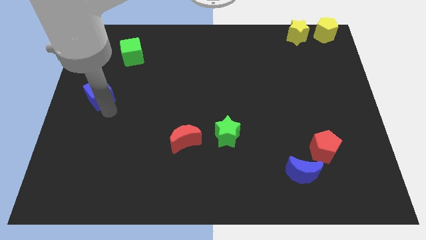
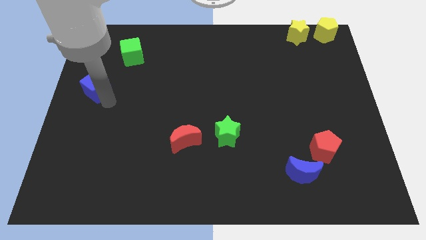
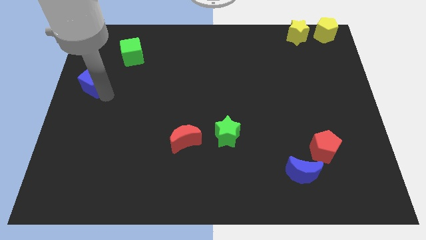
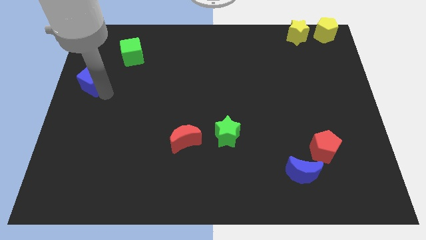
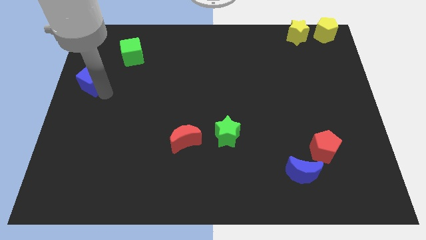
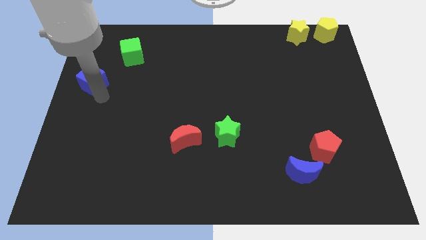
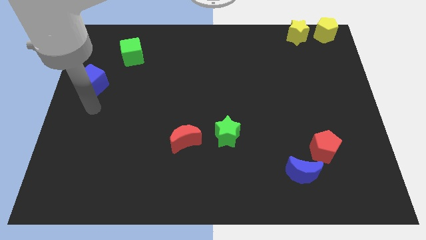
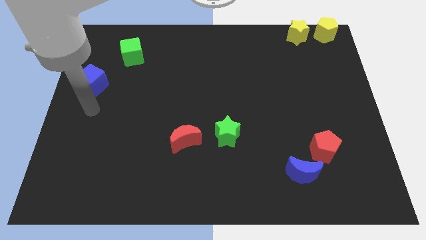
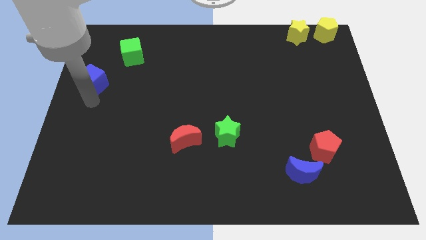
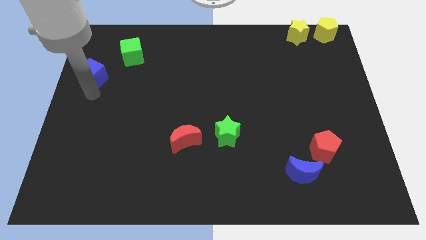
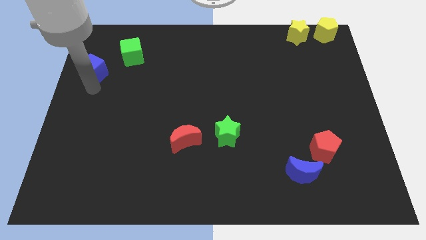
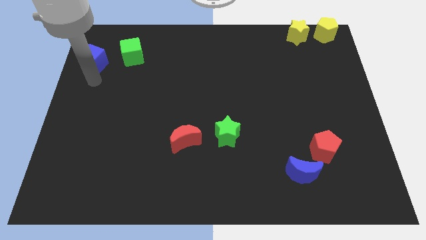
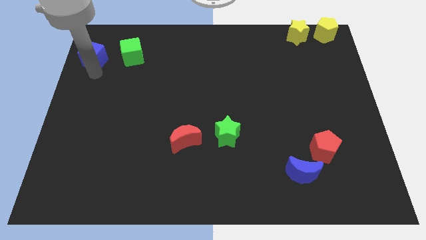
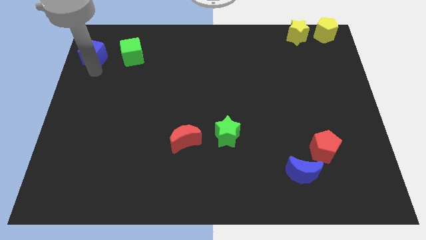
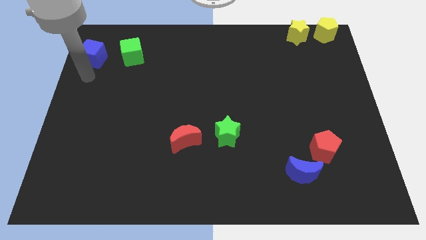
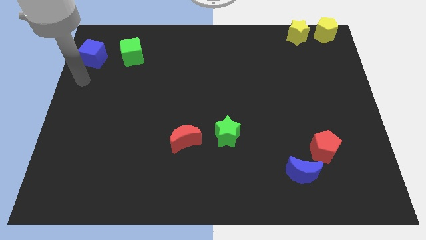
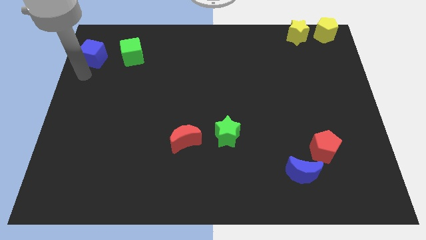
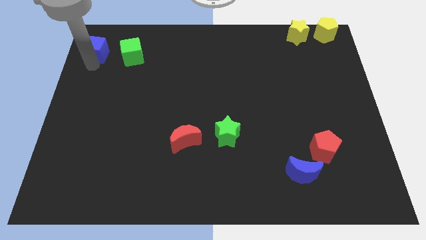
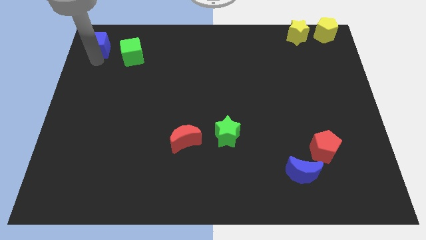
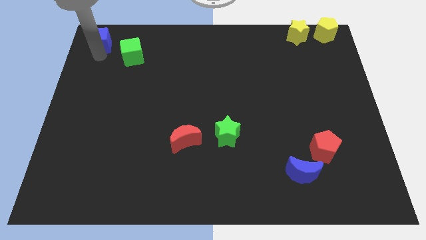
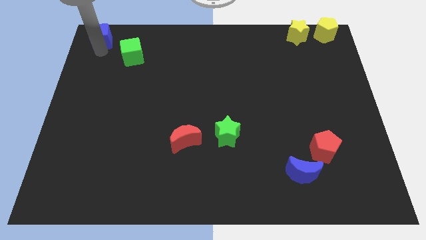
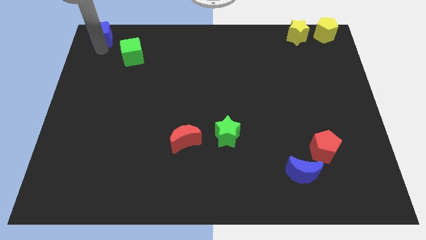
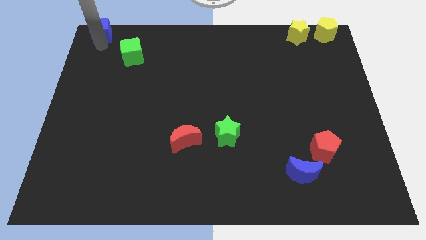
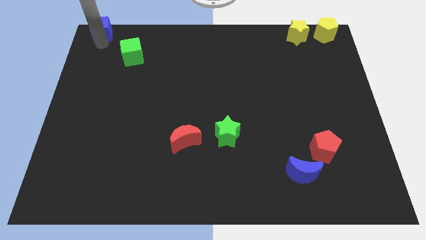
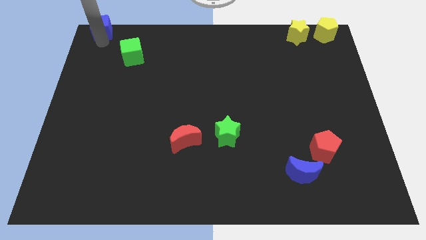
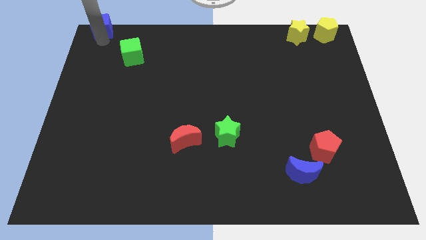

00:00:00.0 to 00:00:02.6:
move the blue cube to the top left of the green cube

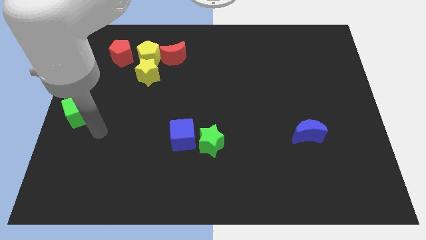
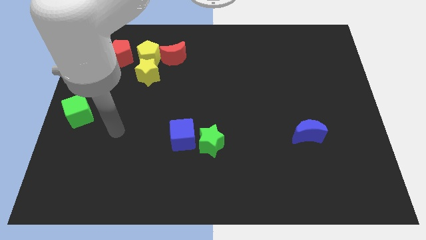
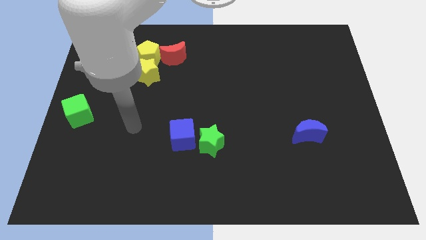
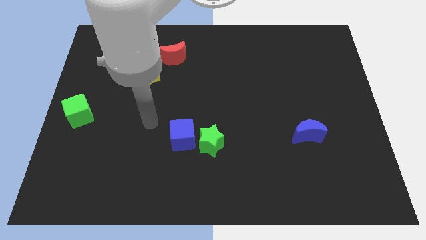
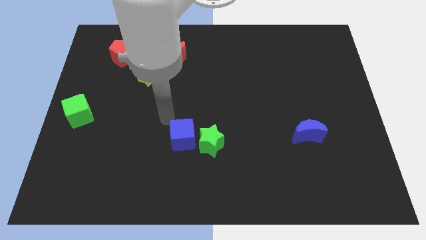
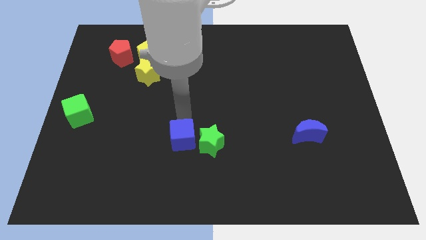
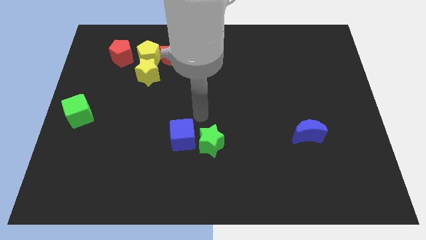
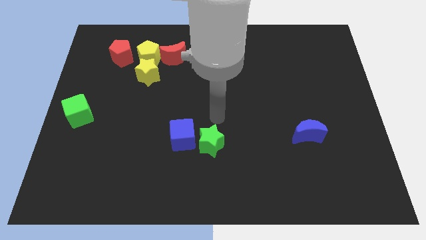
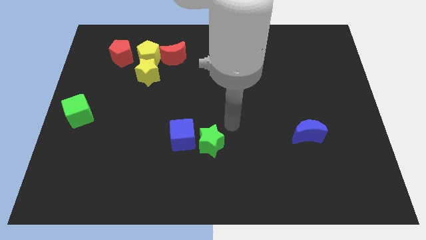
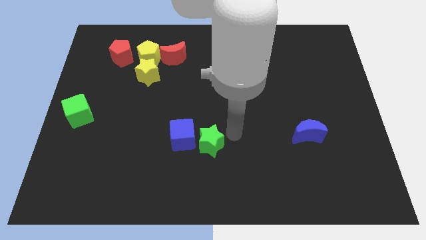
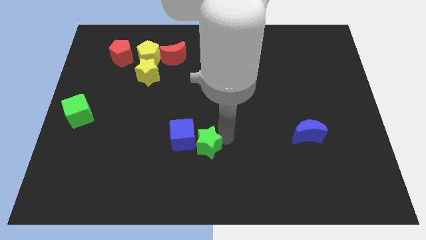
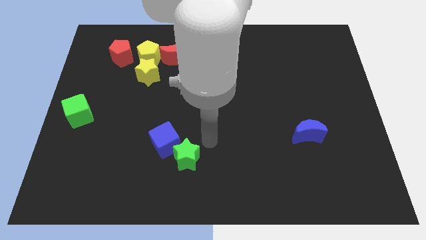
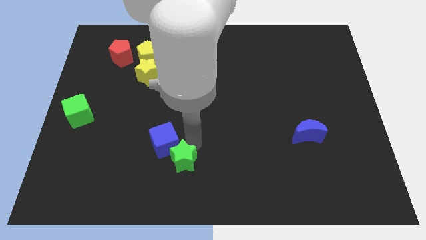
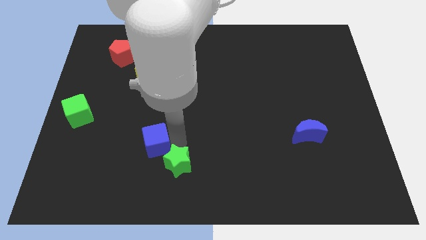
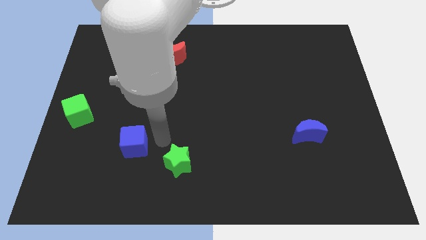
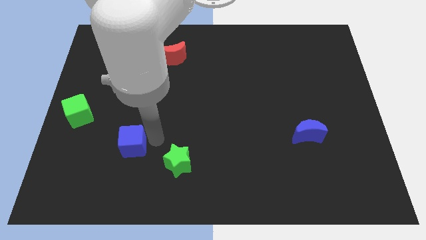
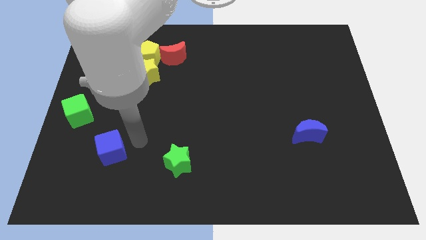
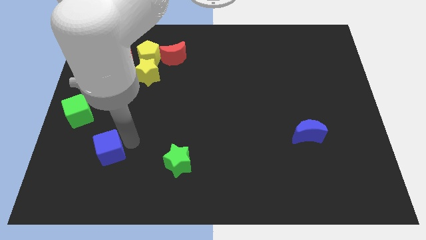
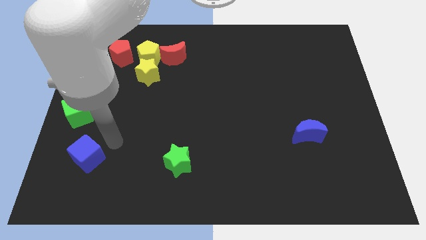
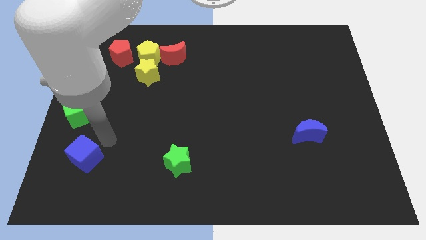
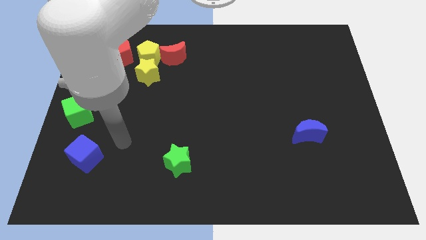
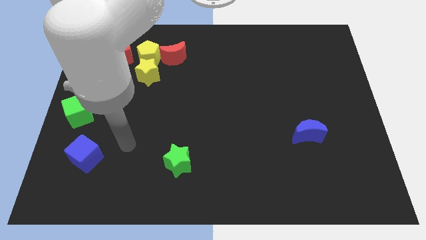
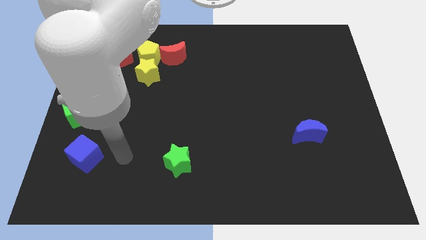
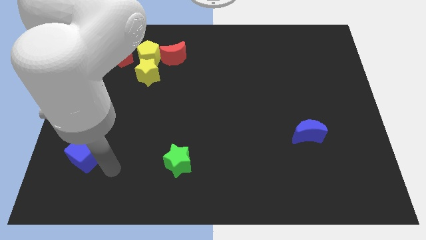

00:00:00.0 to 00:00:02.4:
push the blue cube below the green cube

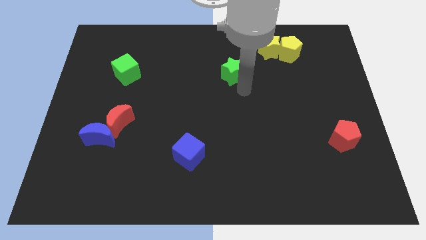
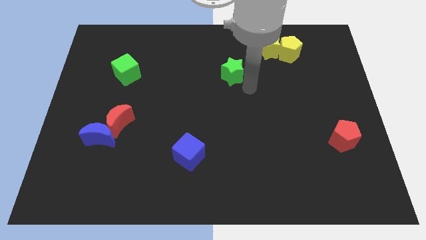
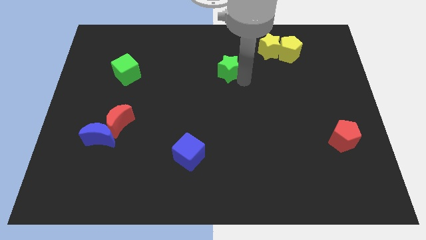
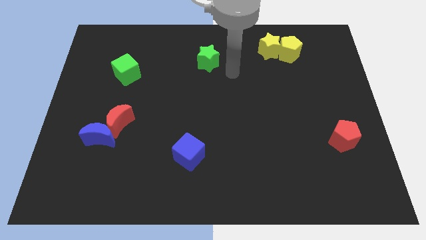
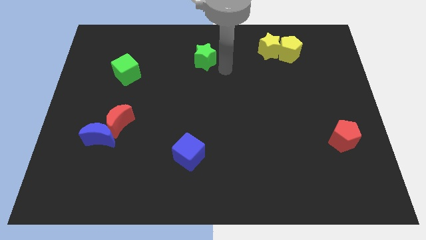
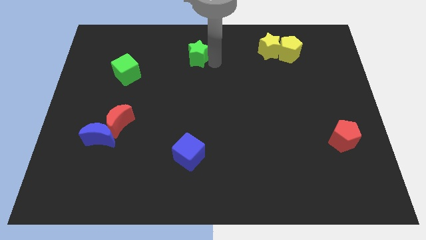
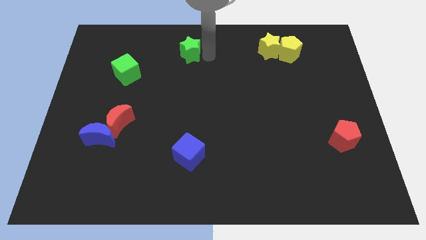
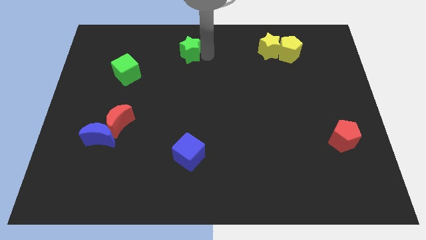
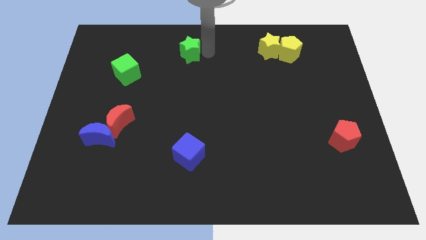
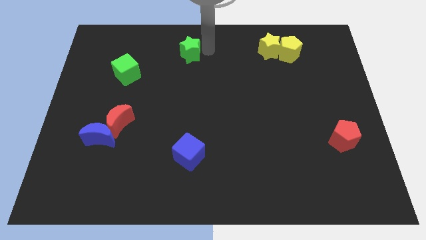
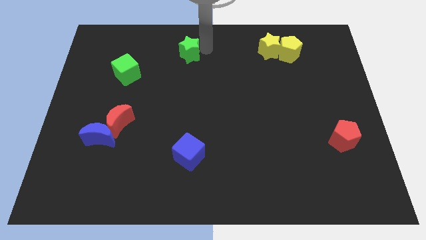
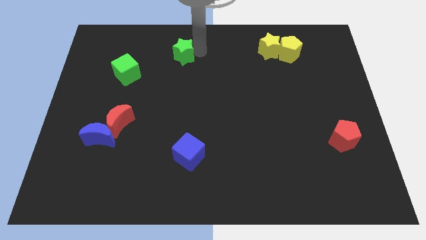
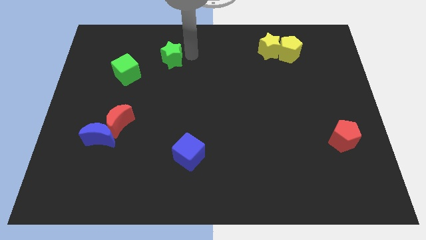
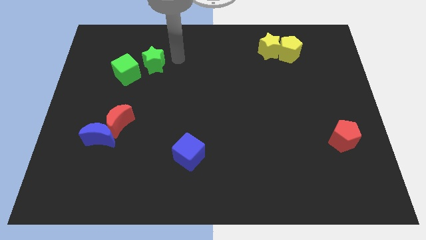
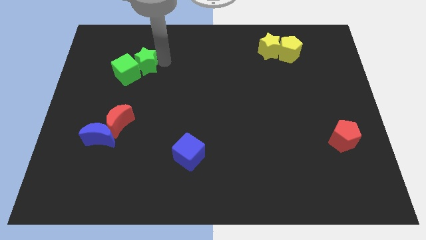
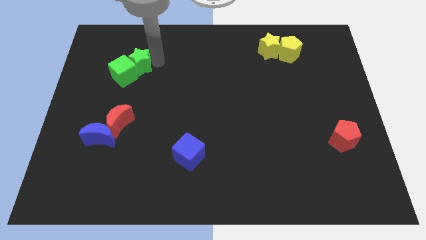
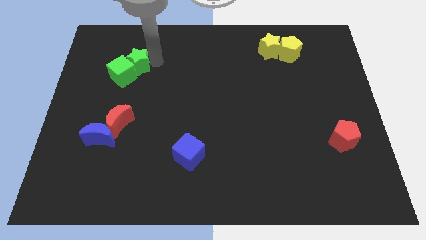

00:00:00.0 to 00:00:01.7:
move the green star into the green cube

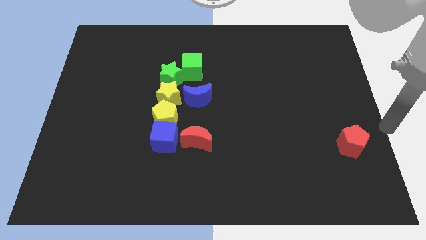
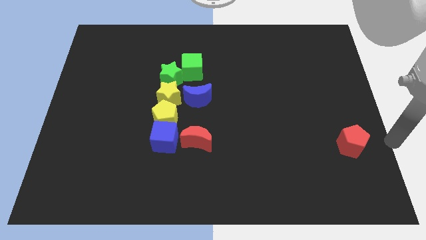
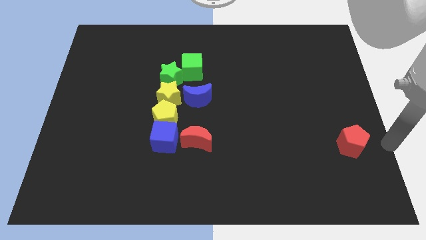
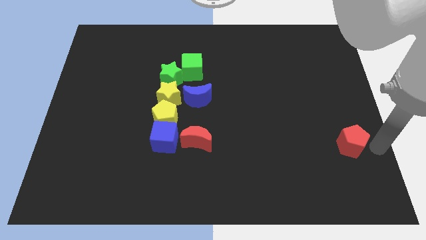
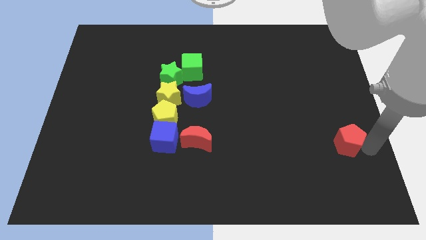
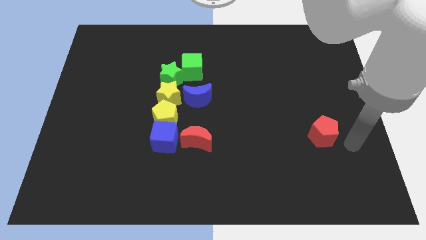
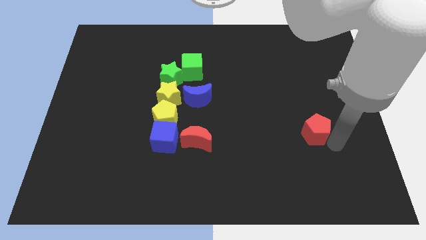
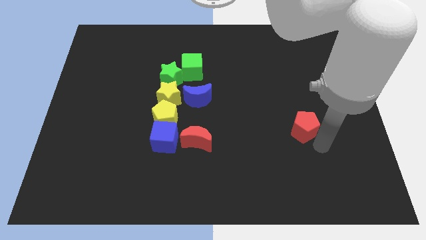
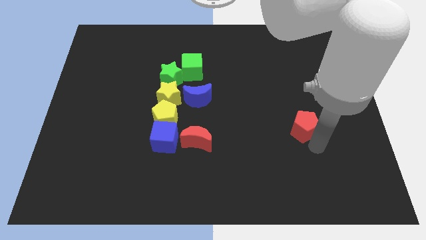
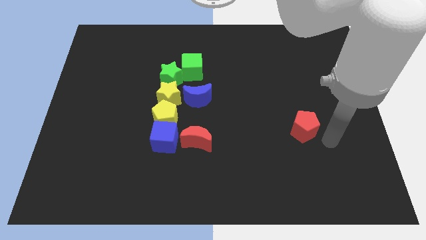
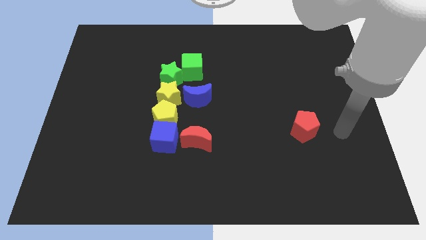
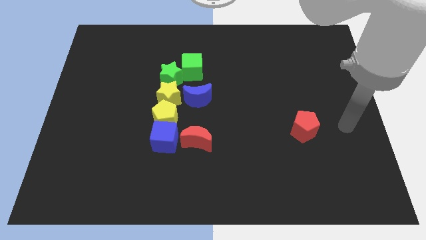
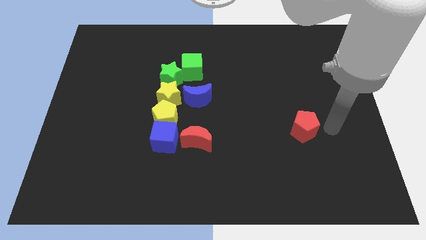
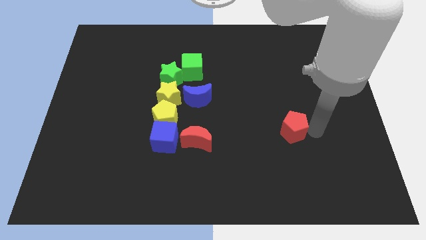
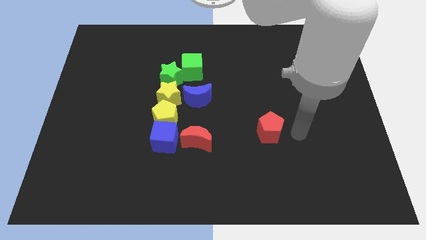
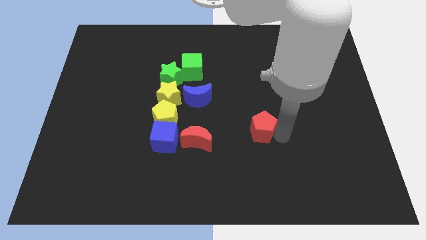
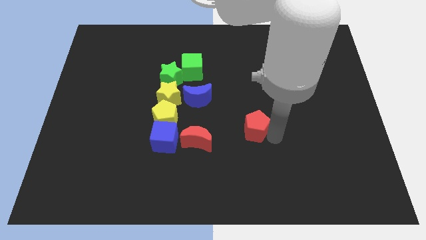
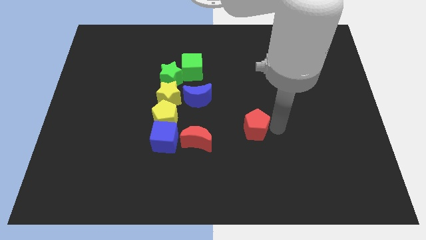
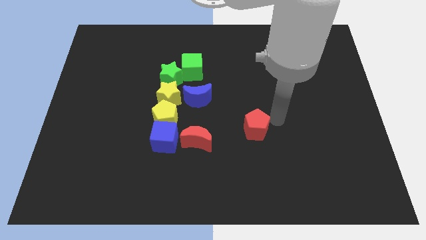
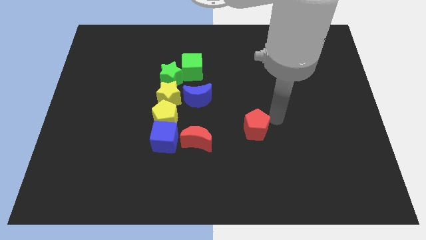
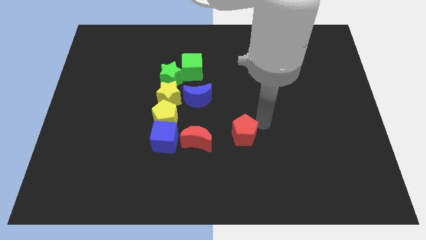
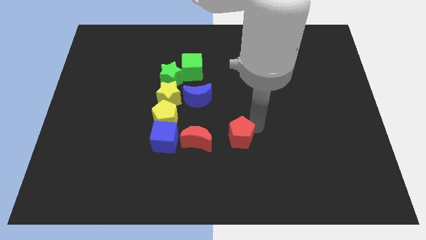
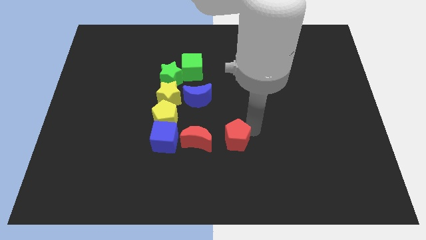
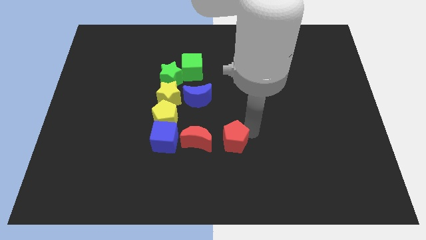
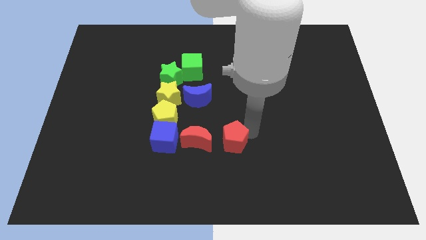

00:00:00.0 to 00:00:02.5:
move the red pentagon to the right side of the red moon
